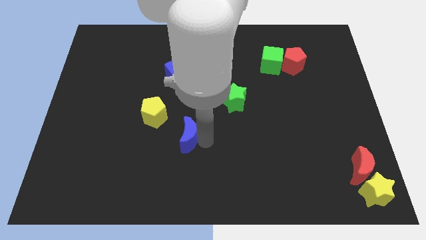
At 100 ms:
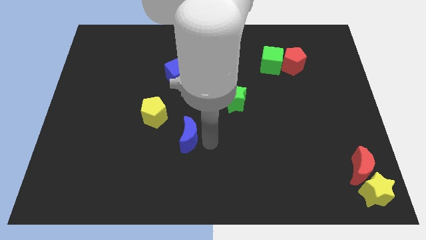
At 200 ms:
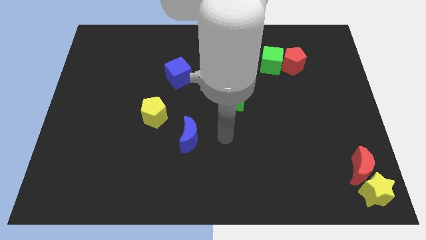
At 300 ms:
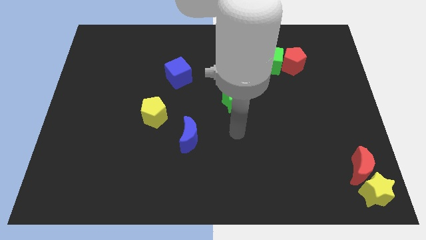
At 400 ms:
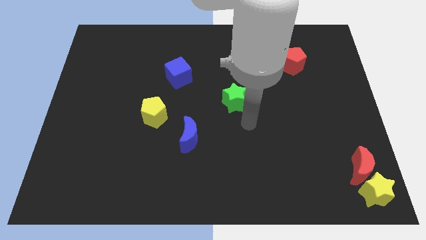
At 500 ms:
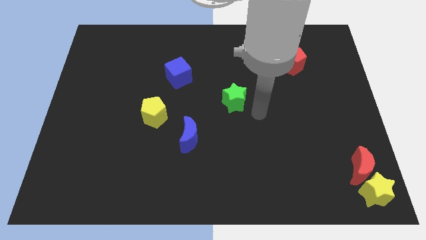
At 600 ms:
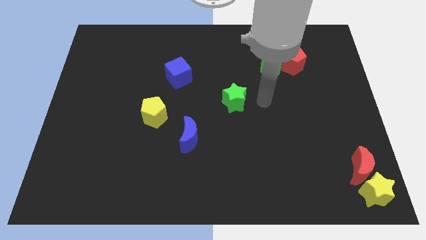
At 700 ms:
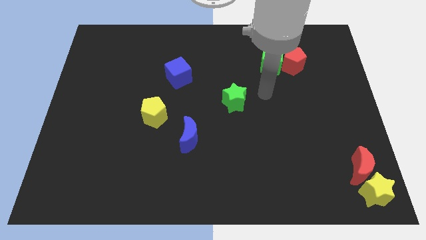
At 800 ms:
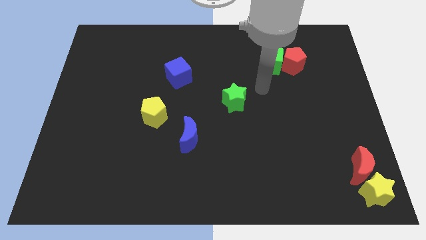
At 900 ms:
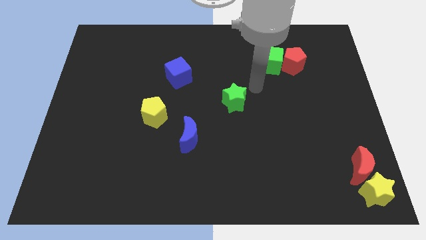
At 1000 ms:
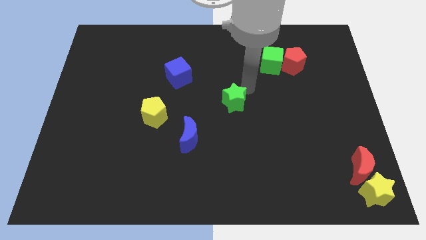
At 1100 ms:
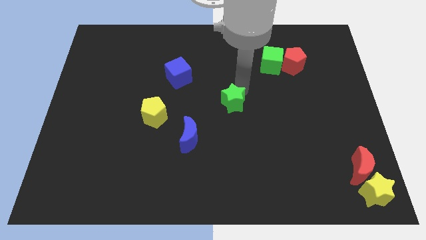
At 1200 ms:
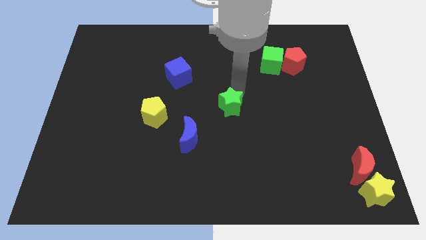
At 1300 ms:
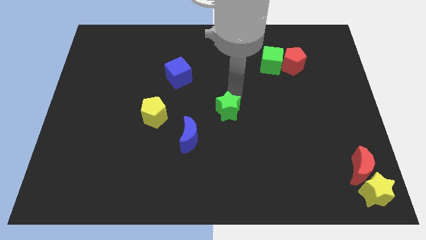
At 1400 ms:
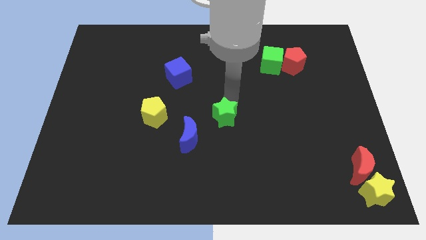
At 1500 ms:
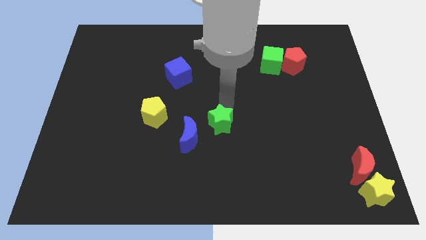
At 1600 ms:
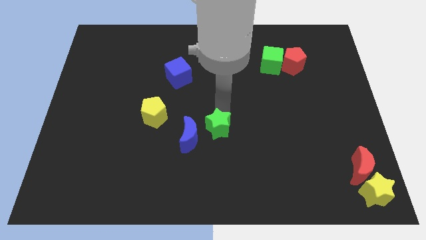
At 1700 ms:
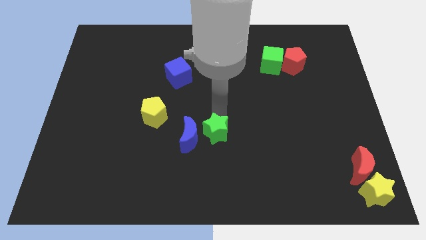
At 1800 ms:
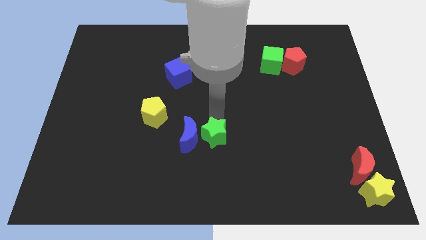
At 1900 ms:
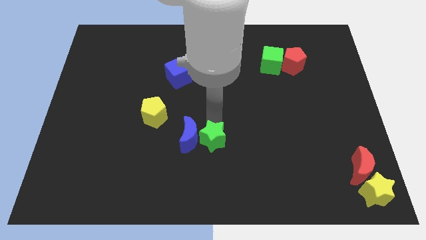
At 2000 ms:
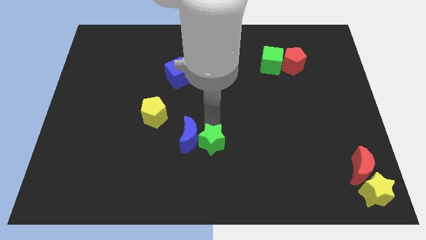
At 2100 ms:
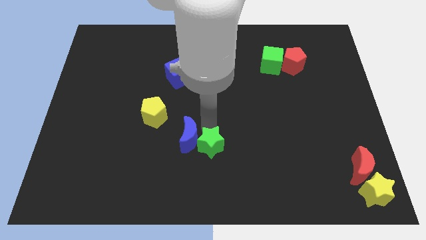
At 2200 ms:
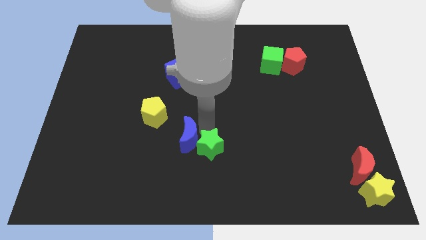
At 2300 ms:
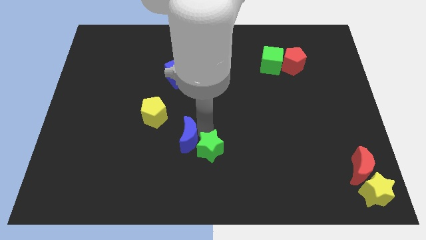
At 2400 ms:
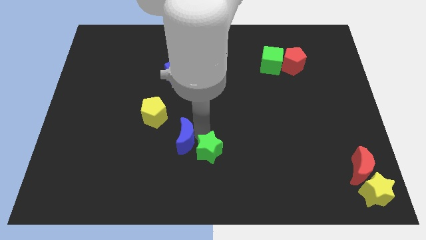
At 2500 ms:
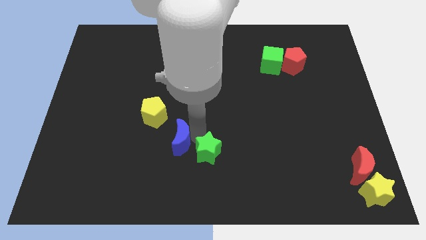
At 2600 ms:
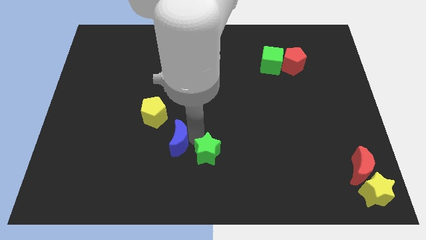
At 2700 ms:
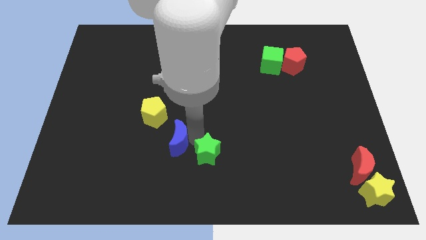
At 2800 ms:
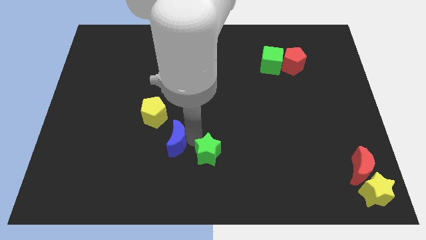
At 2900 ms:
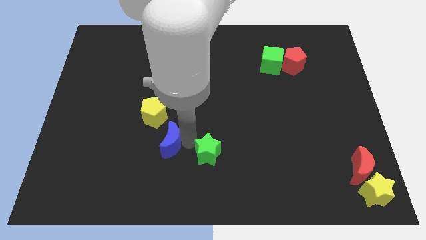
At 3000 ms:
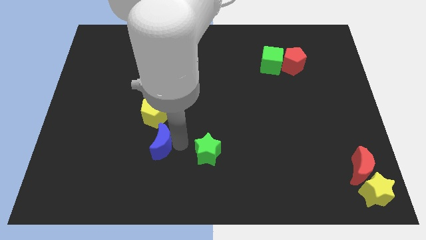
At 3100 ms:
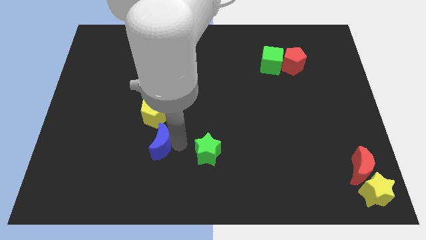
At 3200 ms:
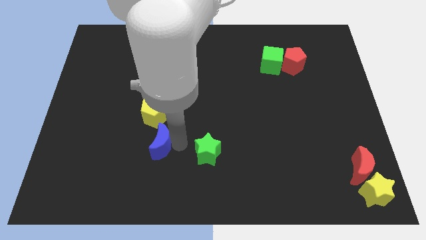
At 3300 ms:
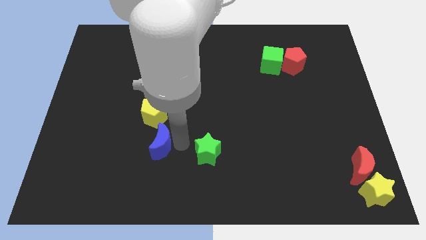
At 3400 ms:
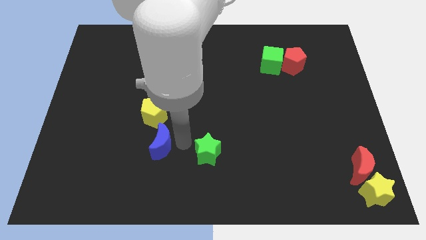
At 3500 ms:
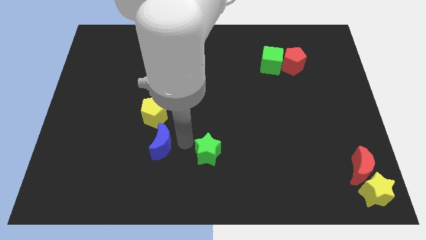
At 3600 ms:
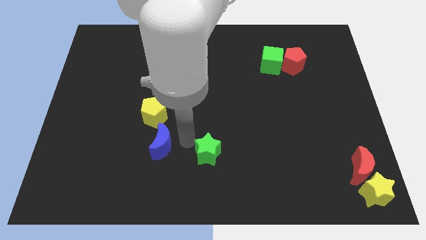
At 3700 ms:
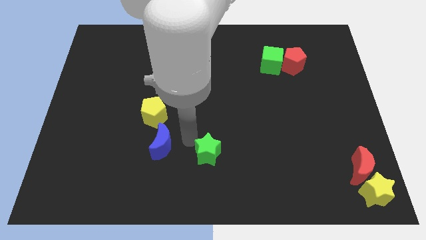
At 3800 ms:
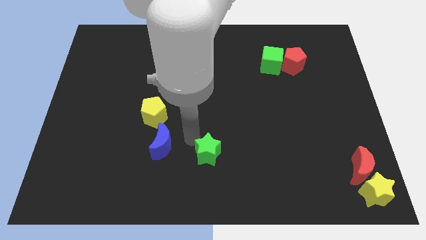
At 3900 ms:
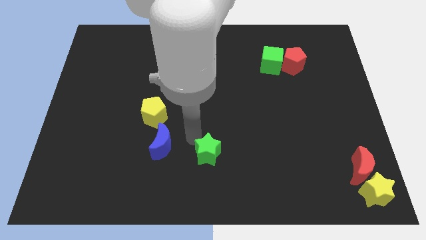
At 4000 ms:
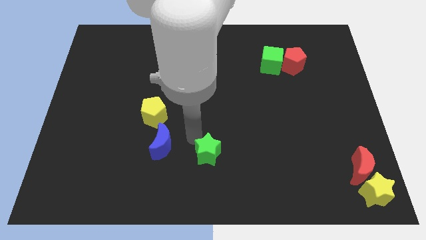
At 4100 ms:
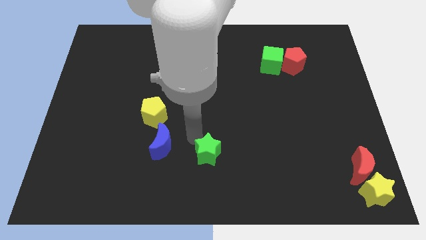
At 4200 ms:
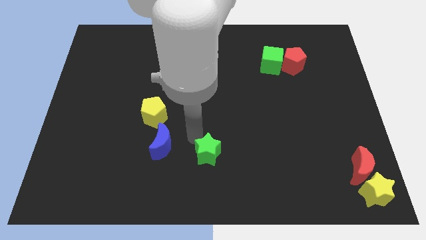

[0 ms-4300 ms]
separate the green star and blue moon

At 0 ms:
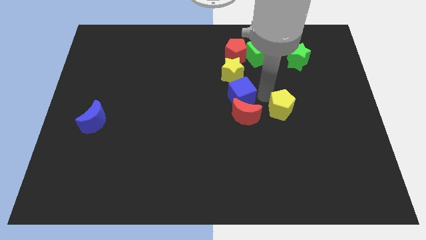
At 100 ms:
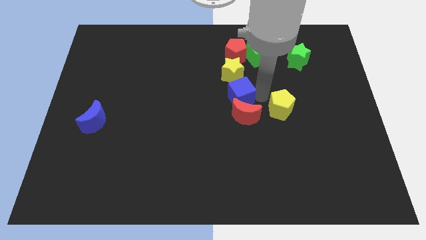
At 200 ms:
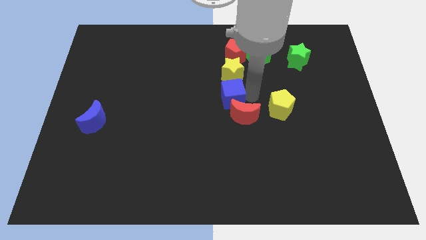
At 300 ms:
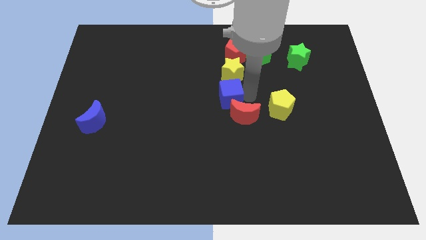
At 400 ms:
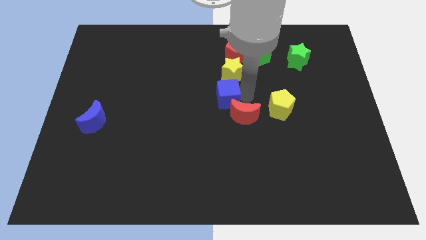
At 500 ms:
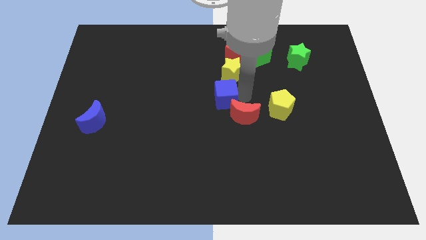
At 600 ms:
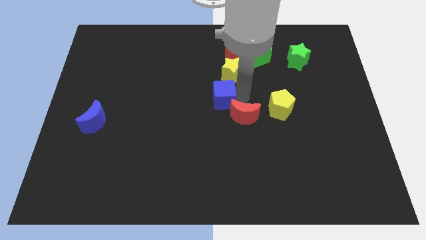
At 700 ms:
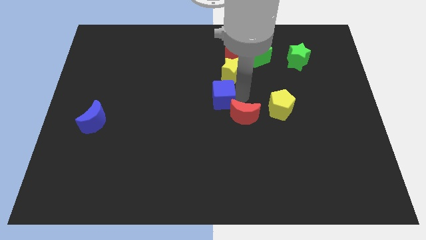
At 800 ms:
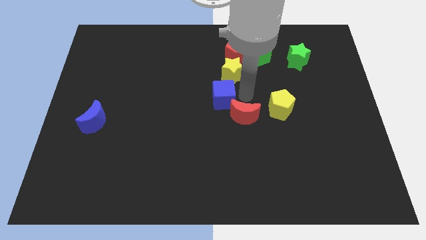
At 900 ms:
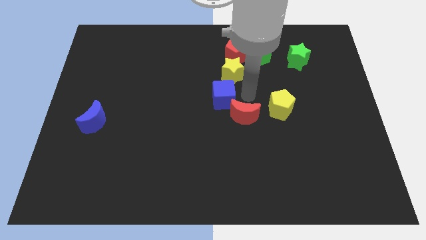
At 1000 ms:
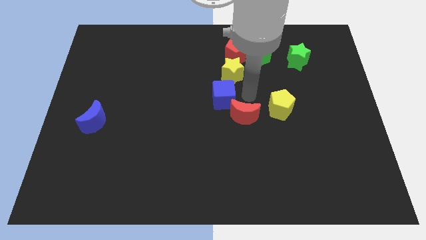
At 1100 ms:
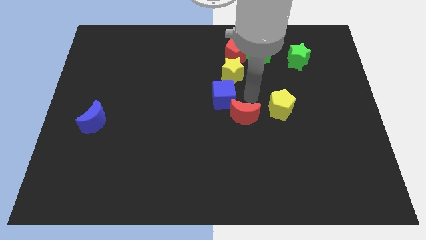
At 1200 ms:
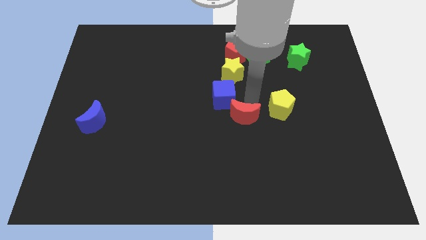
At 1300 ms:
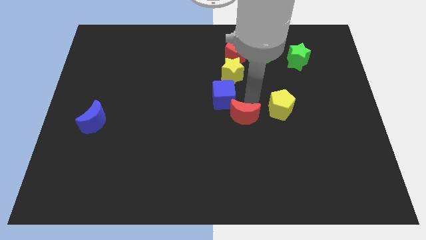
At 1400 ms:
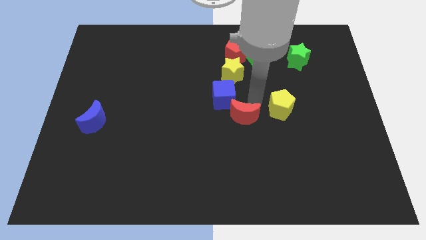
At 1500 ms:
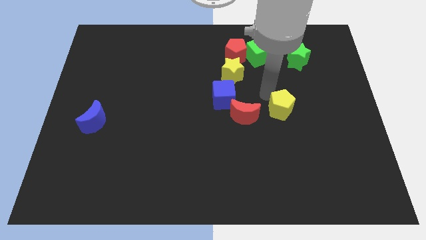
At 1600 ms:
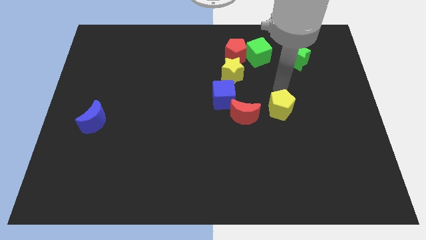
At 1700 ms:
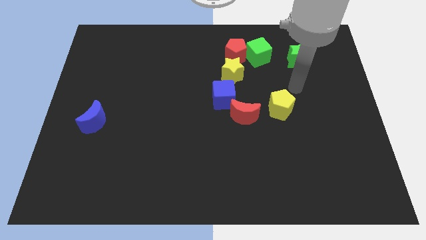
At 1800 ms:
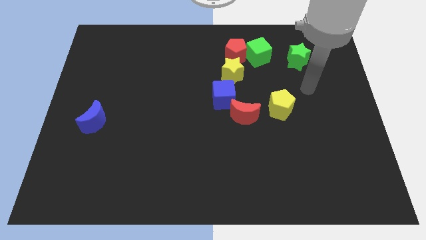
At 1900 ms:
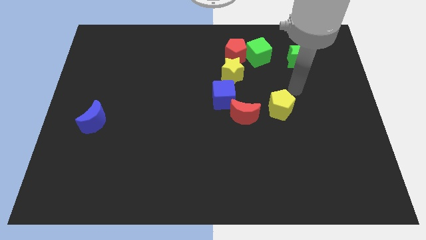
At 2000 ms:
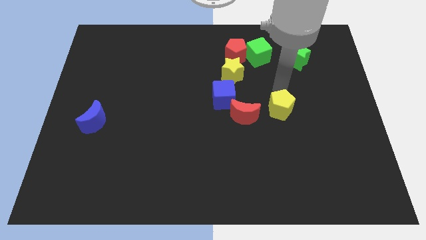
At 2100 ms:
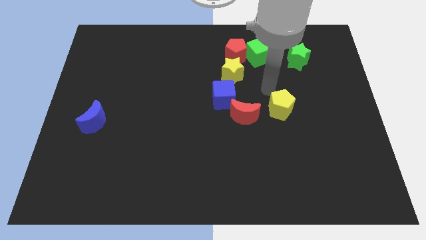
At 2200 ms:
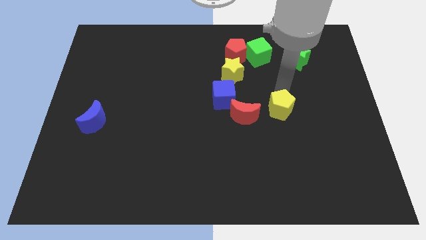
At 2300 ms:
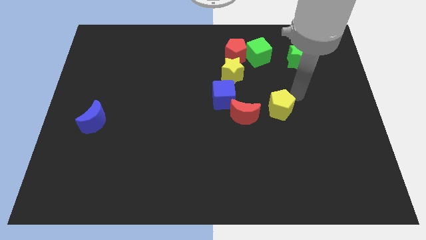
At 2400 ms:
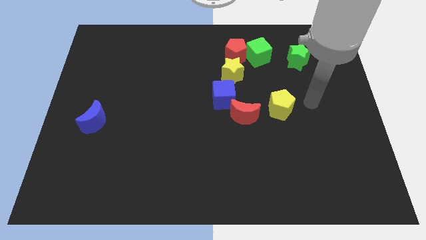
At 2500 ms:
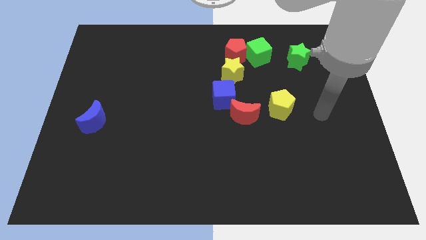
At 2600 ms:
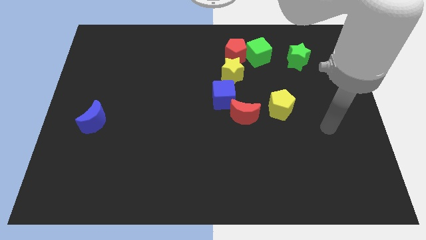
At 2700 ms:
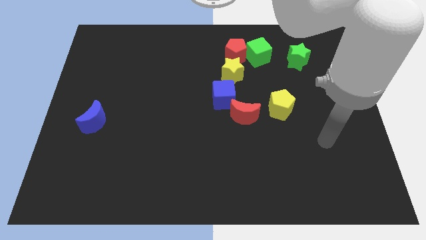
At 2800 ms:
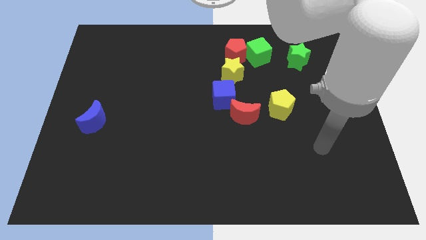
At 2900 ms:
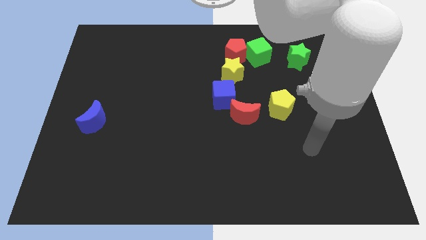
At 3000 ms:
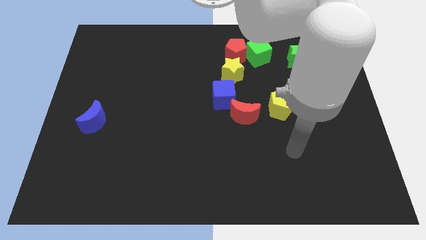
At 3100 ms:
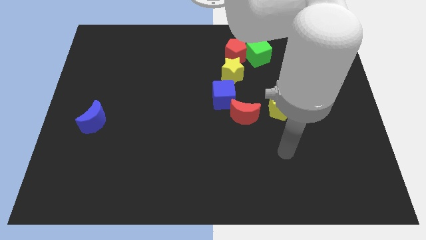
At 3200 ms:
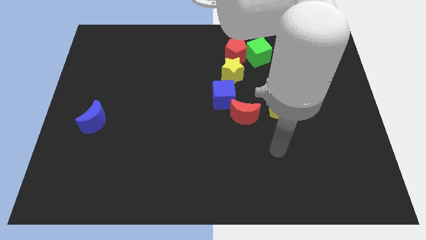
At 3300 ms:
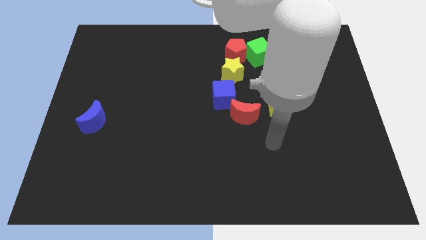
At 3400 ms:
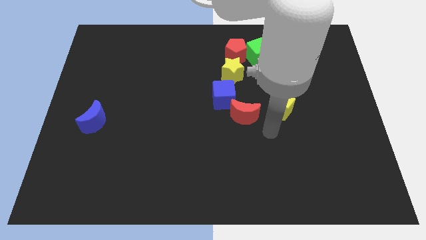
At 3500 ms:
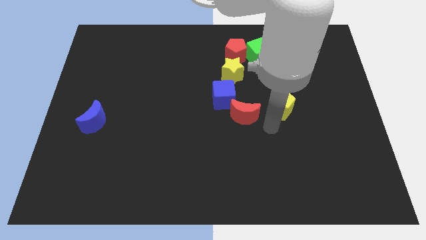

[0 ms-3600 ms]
push the blue cube slightly to the left

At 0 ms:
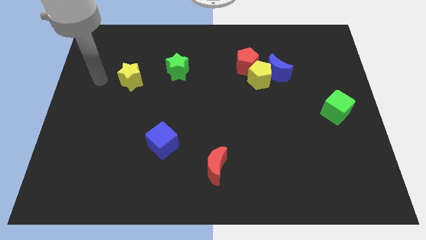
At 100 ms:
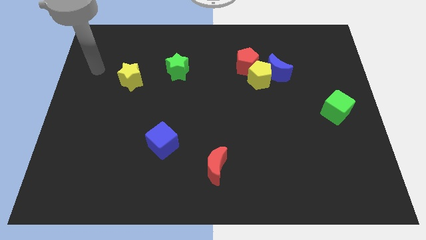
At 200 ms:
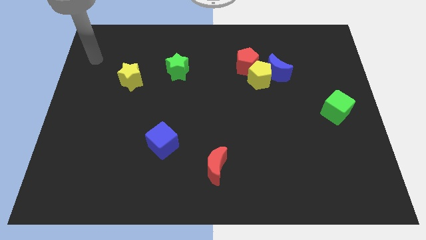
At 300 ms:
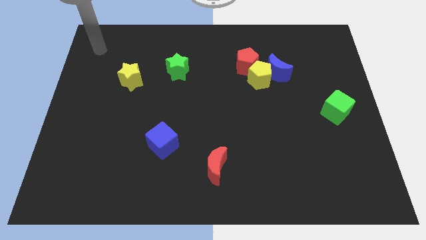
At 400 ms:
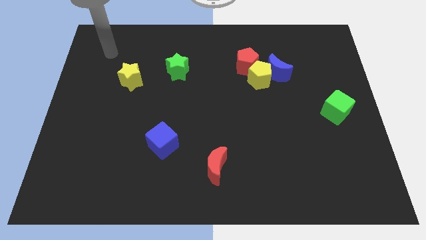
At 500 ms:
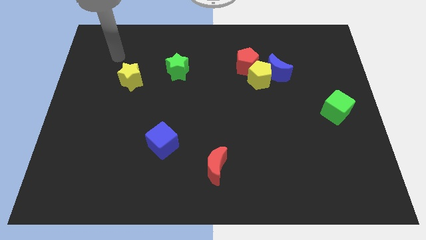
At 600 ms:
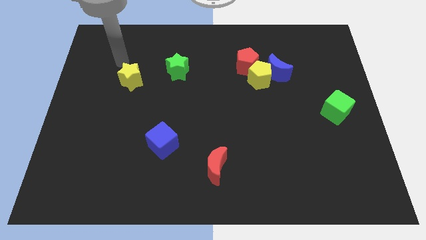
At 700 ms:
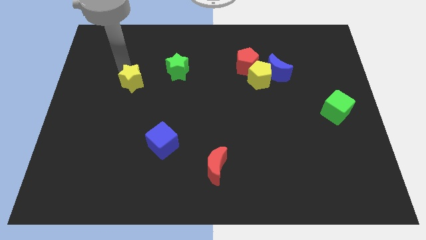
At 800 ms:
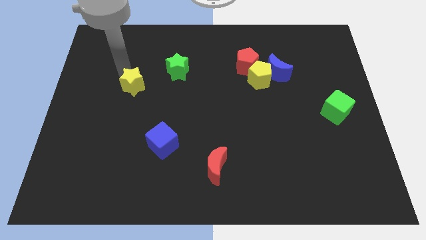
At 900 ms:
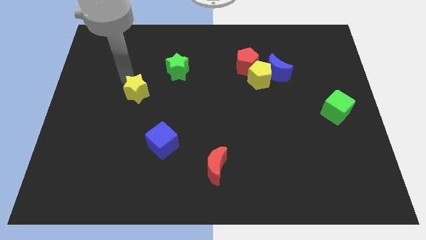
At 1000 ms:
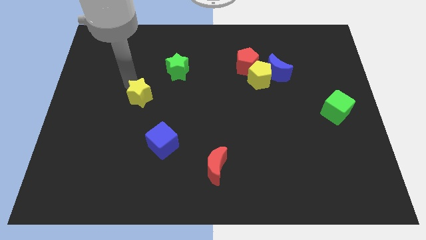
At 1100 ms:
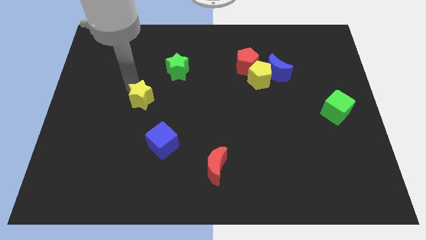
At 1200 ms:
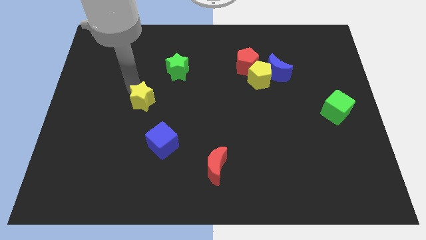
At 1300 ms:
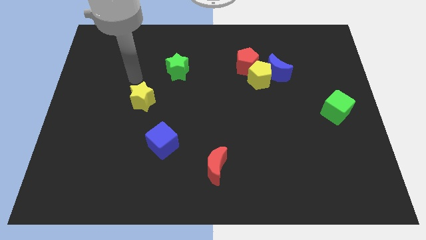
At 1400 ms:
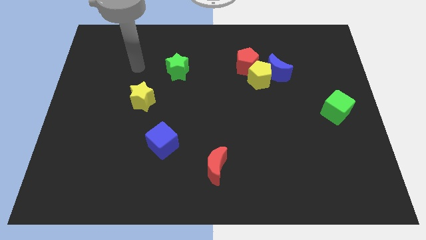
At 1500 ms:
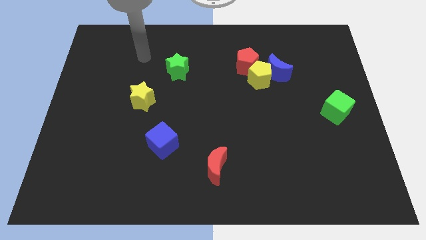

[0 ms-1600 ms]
drag the yellow star towards the blue cube
